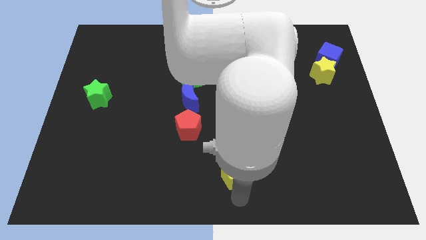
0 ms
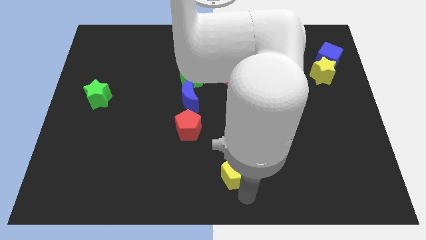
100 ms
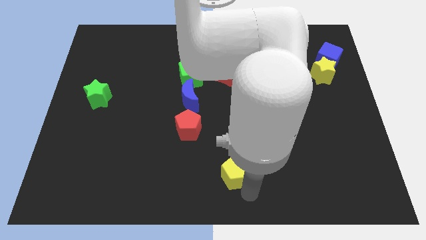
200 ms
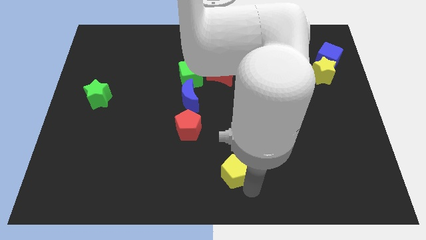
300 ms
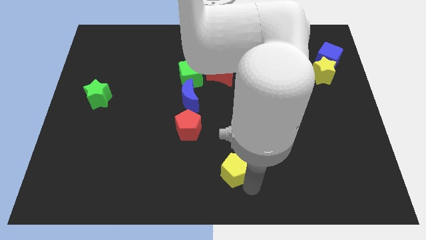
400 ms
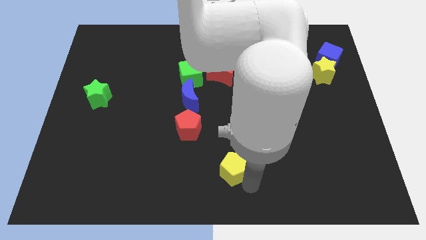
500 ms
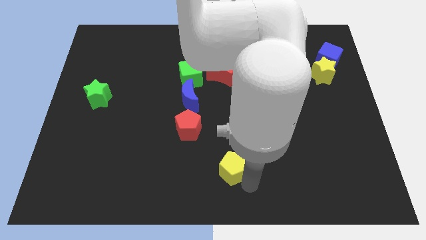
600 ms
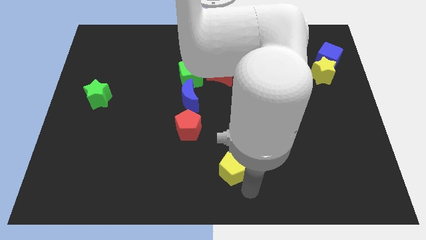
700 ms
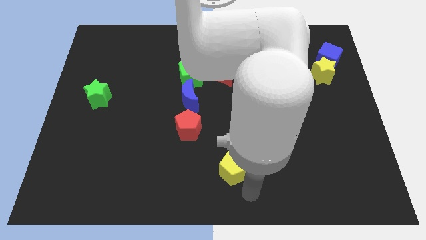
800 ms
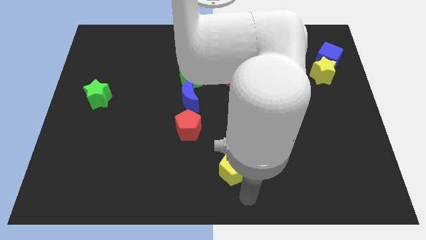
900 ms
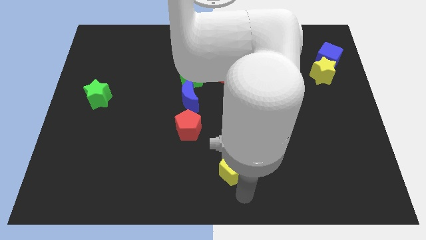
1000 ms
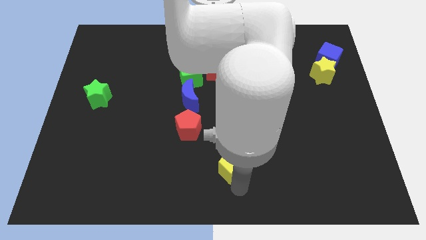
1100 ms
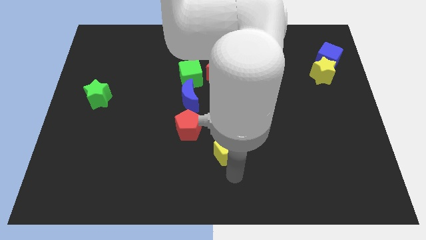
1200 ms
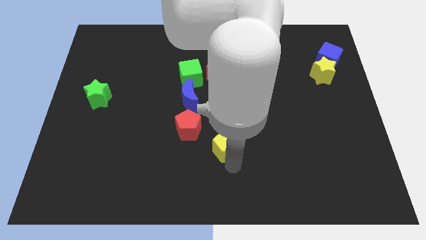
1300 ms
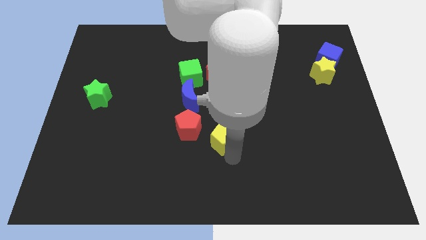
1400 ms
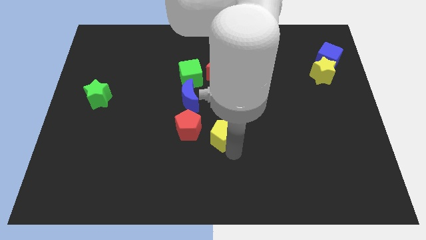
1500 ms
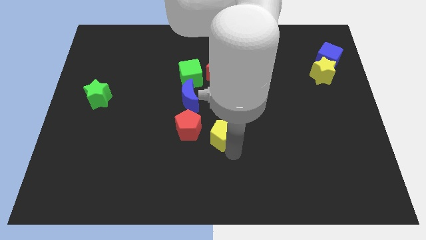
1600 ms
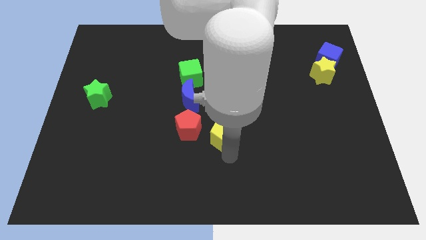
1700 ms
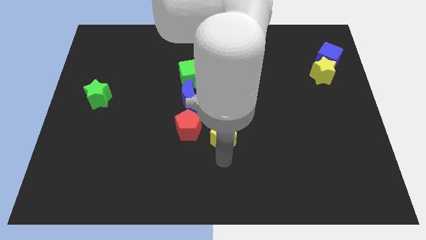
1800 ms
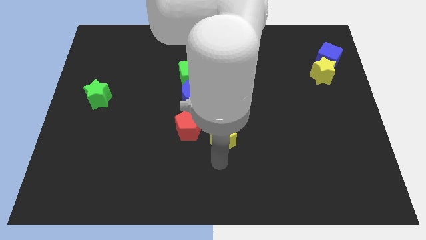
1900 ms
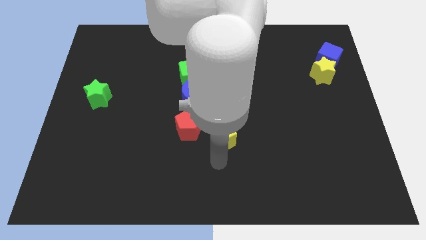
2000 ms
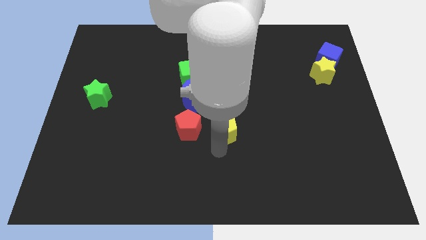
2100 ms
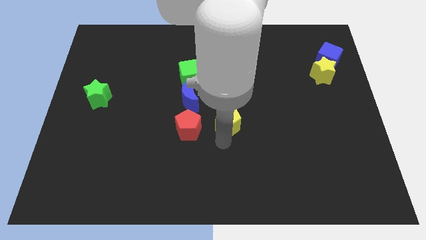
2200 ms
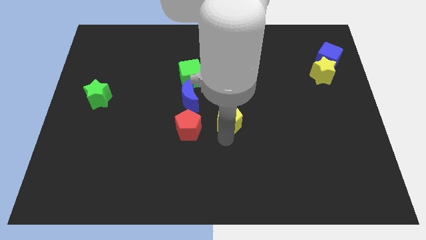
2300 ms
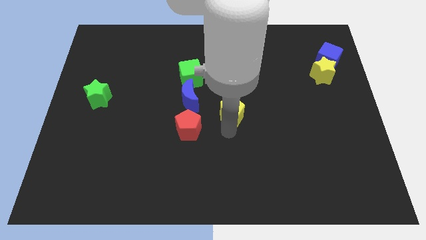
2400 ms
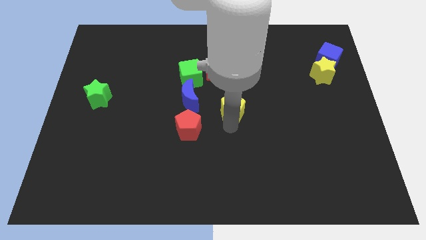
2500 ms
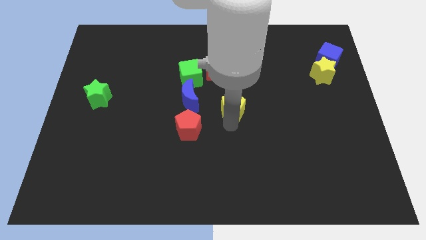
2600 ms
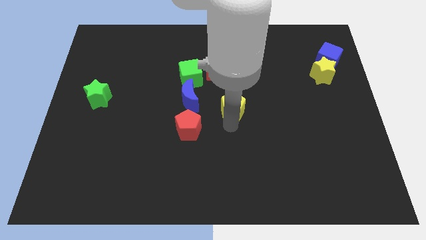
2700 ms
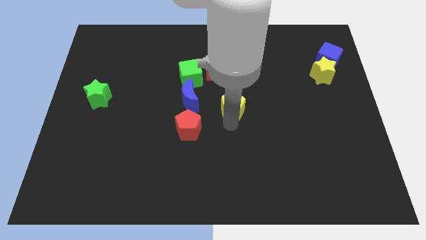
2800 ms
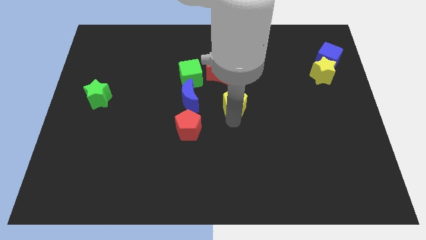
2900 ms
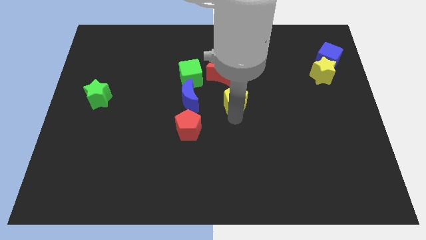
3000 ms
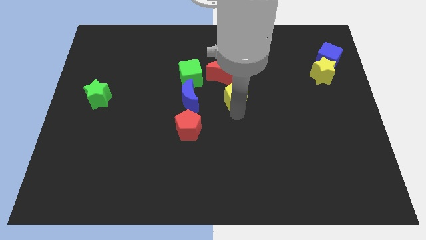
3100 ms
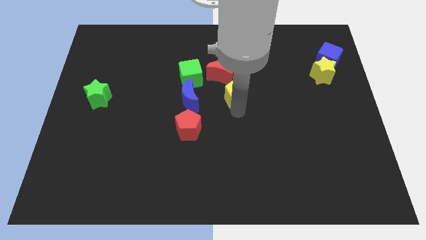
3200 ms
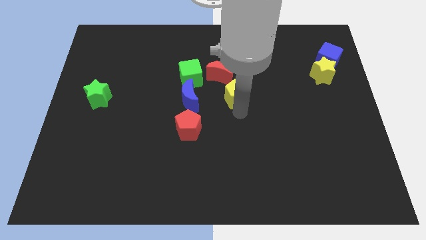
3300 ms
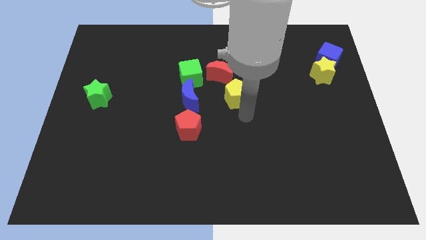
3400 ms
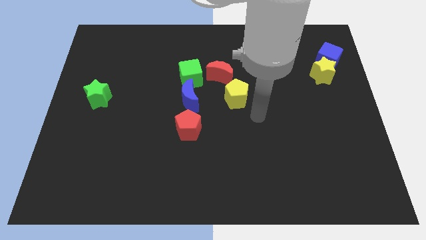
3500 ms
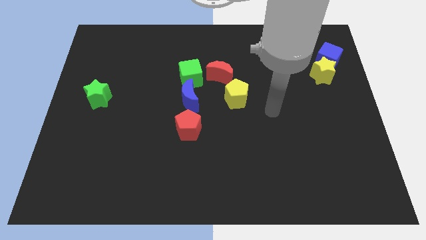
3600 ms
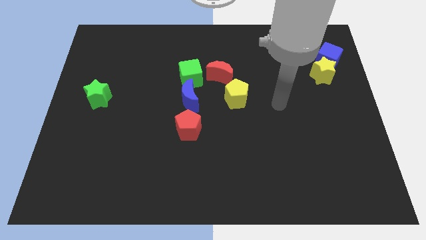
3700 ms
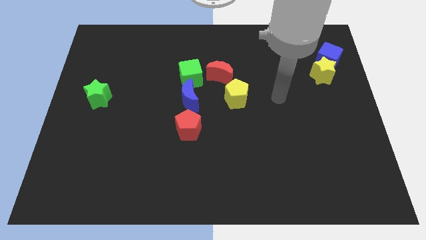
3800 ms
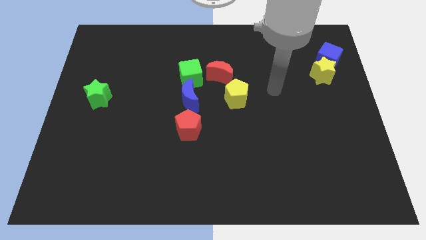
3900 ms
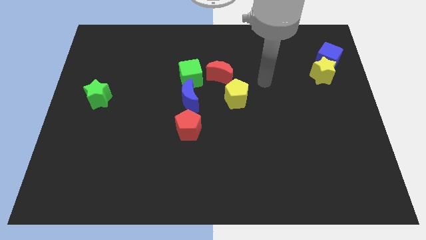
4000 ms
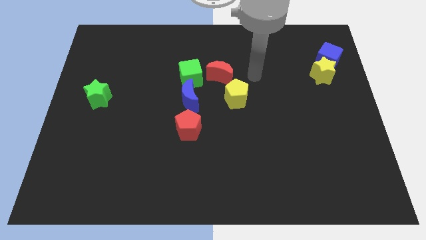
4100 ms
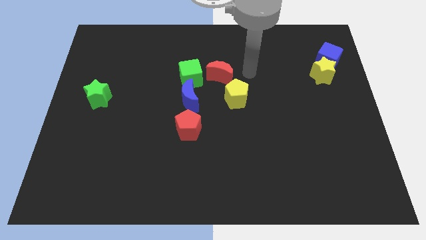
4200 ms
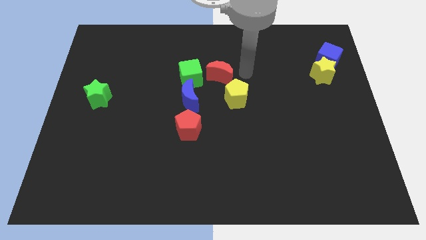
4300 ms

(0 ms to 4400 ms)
push yellow pentagon at the bottom of red crescent

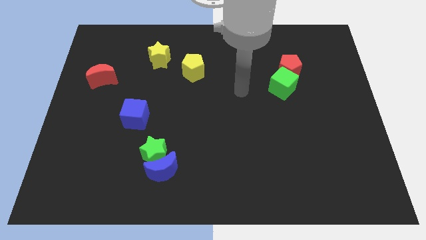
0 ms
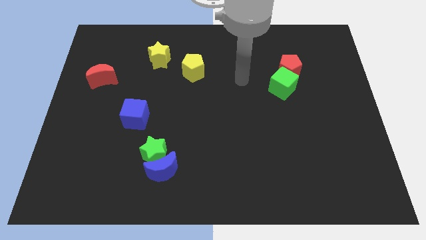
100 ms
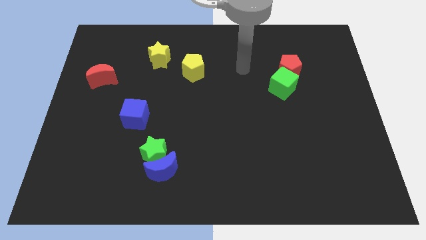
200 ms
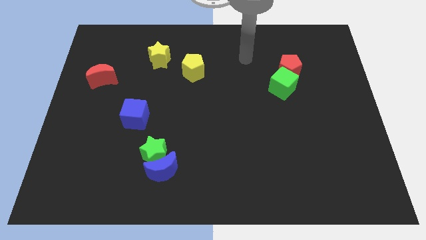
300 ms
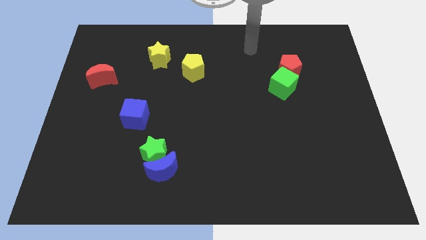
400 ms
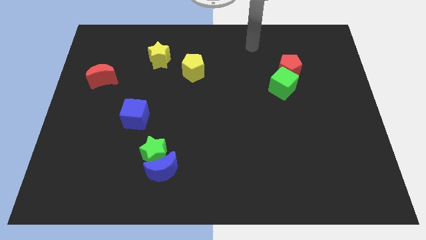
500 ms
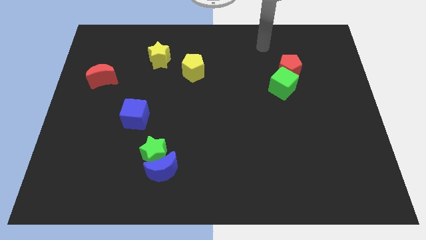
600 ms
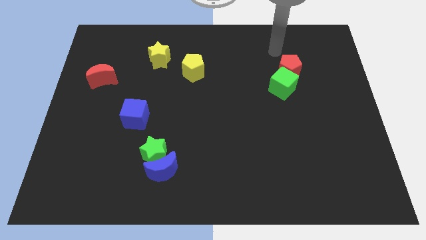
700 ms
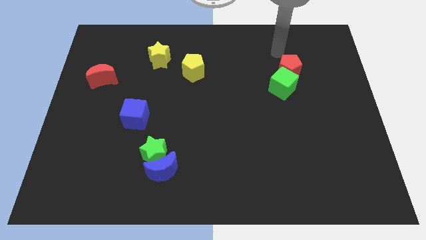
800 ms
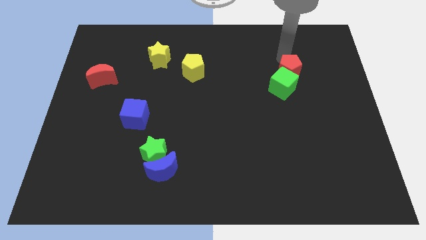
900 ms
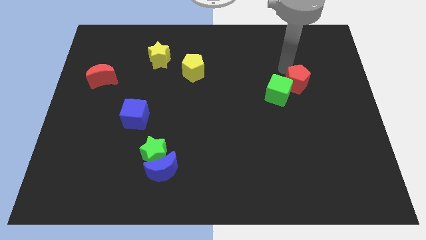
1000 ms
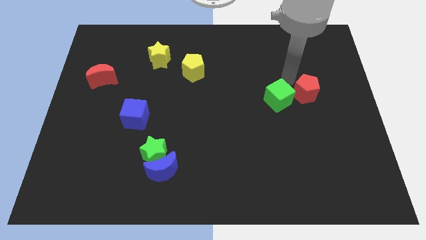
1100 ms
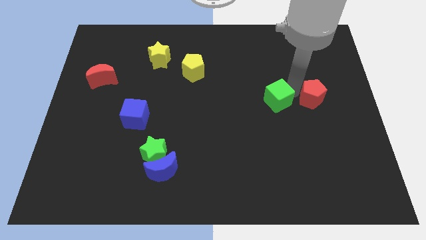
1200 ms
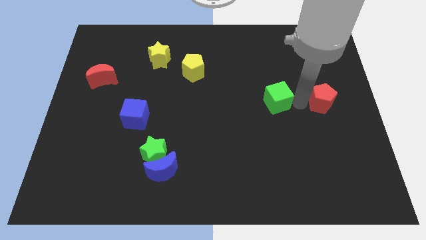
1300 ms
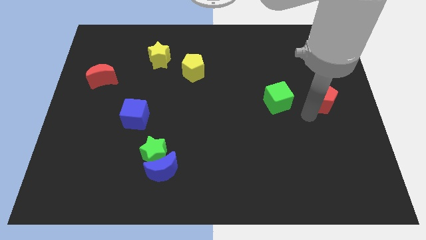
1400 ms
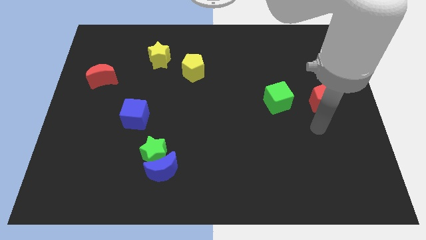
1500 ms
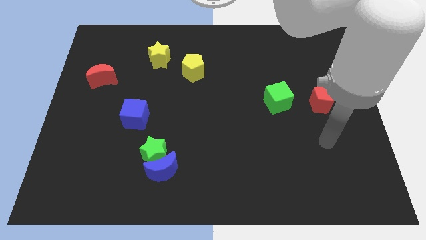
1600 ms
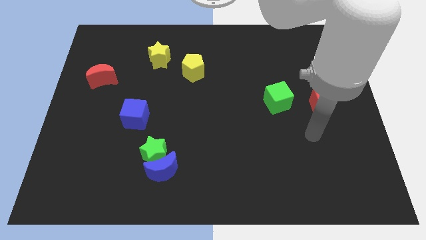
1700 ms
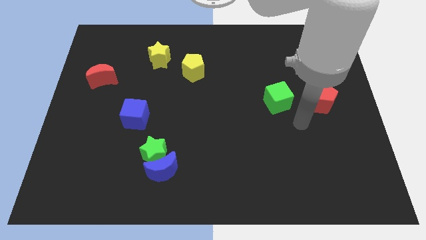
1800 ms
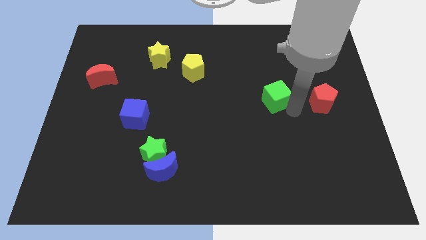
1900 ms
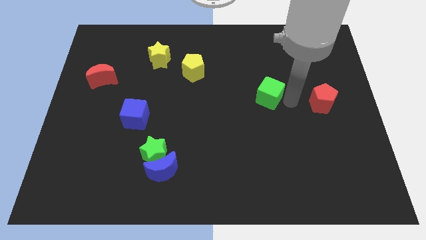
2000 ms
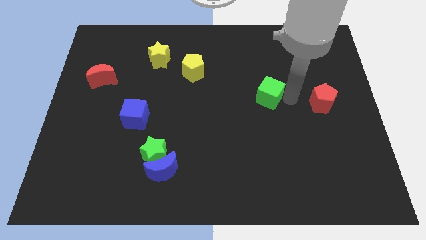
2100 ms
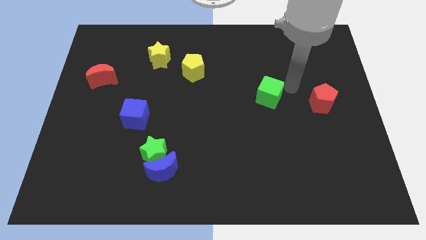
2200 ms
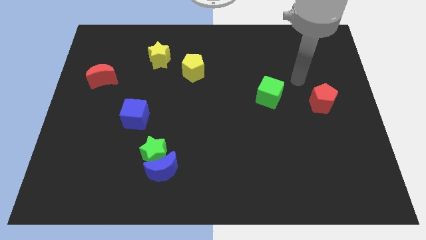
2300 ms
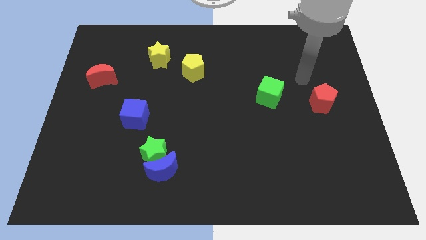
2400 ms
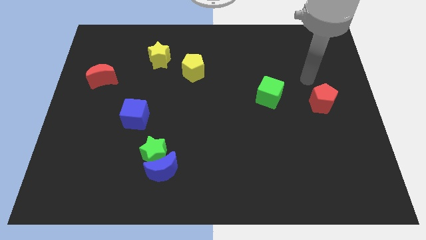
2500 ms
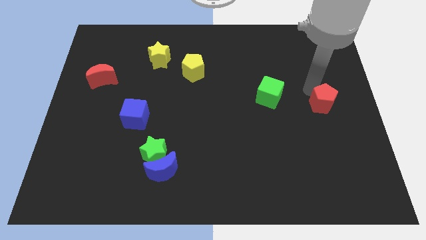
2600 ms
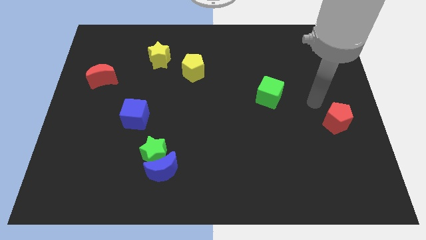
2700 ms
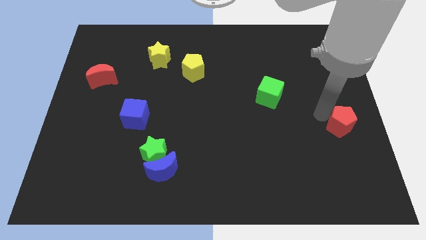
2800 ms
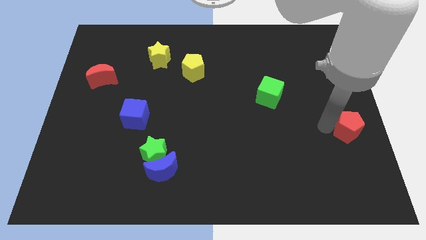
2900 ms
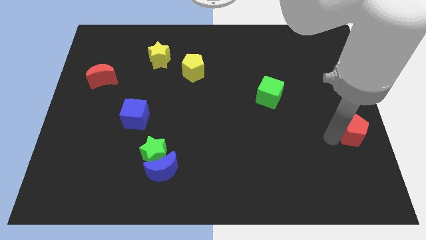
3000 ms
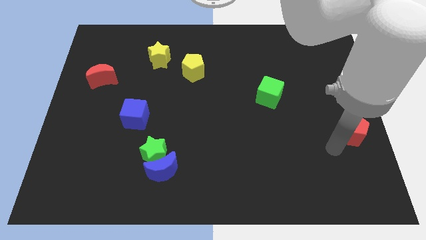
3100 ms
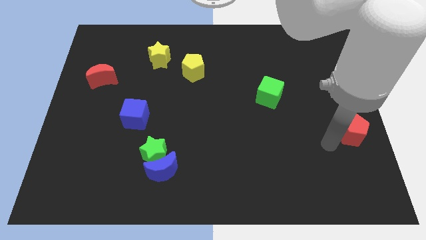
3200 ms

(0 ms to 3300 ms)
separate the green cube and red pentagon

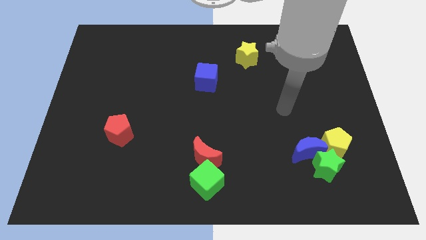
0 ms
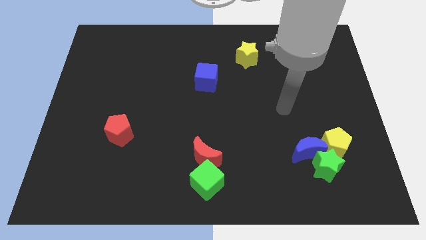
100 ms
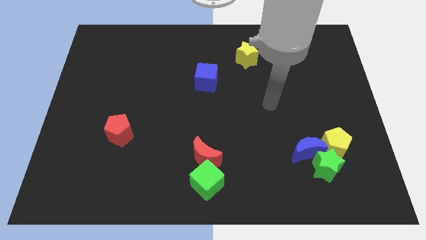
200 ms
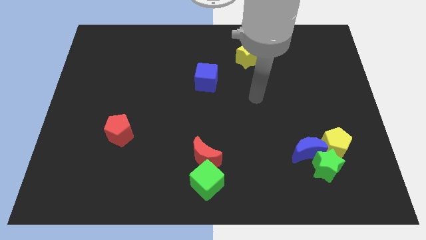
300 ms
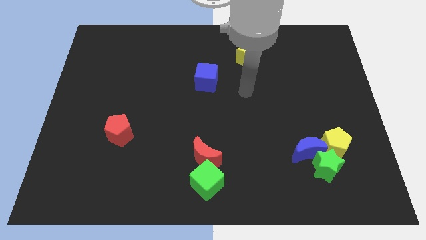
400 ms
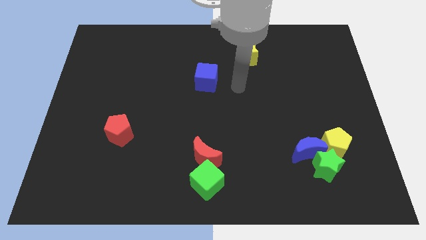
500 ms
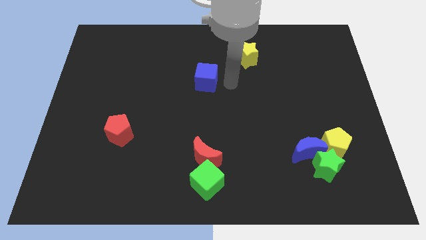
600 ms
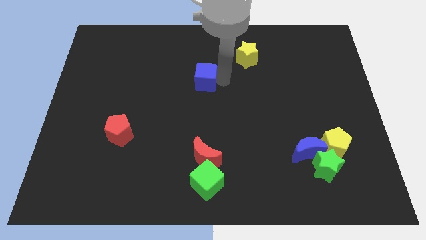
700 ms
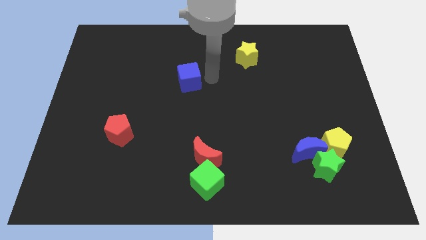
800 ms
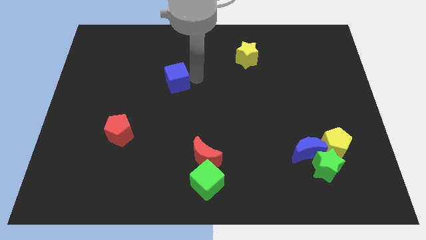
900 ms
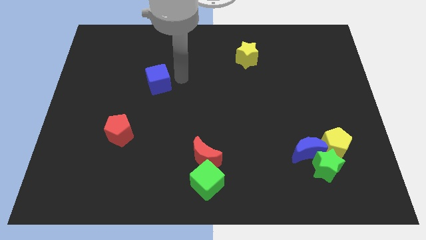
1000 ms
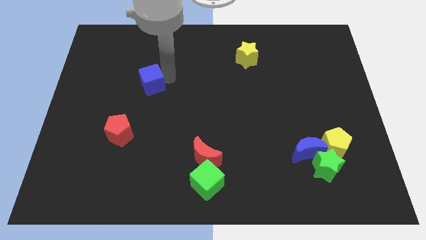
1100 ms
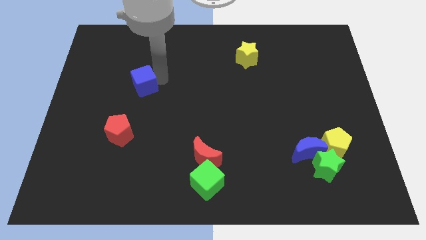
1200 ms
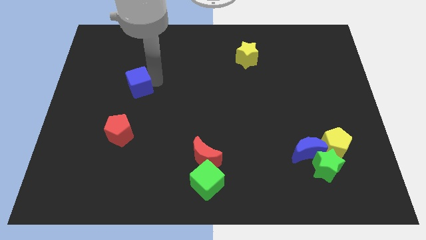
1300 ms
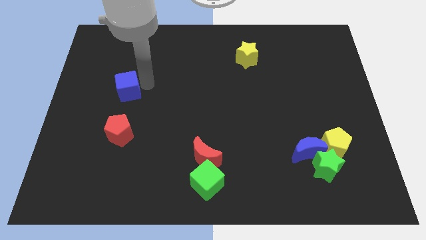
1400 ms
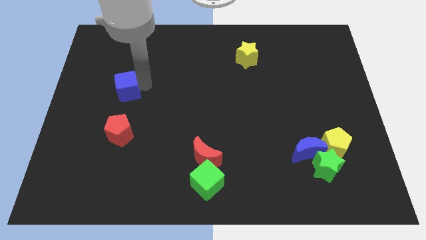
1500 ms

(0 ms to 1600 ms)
place the blue cube above the red pentagon
